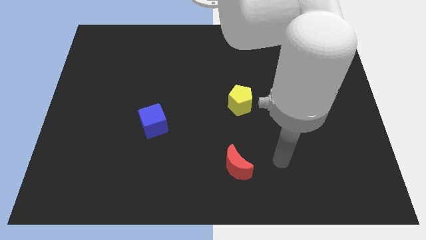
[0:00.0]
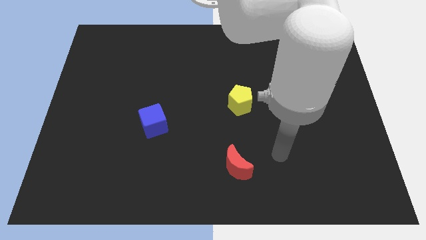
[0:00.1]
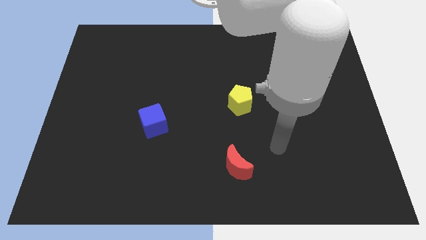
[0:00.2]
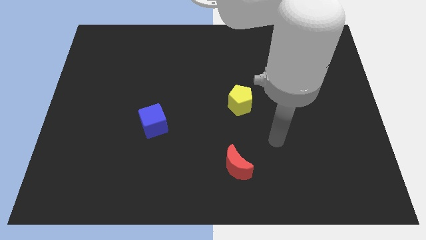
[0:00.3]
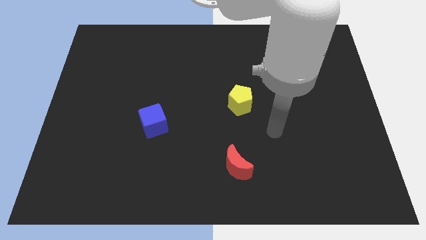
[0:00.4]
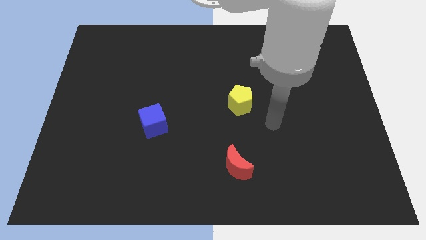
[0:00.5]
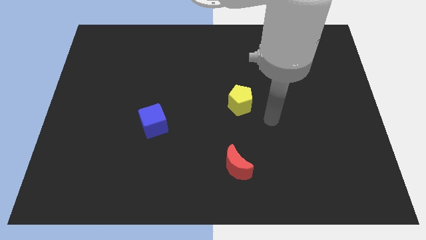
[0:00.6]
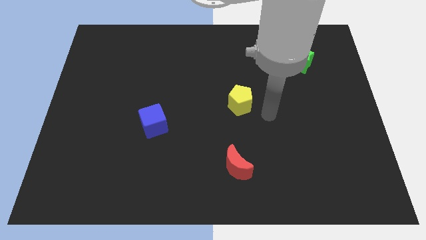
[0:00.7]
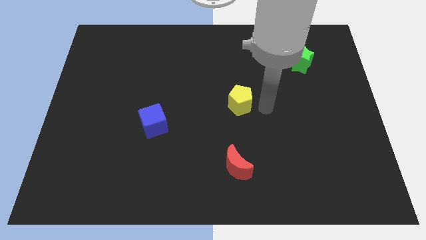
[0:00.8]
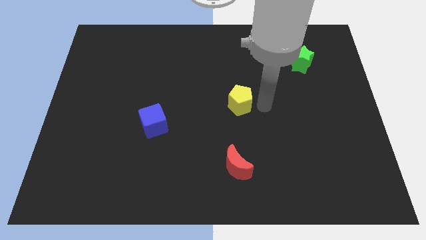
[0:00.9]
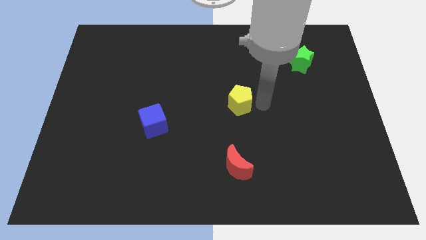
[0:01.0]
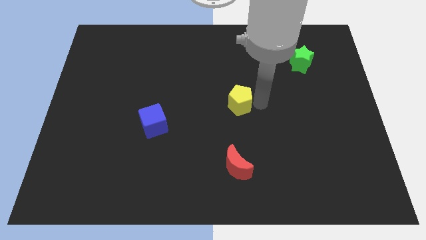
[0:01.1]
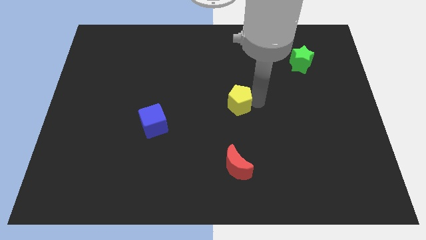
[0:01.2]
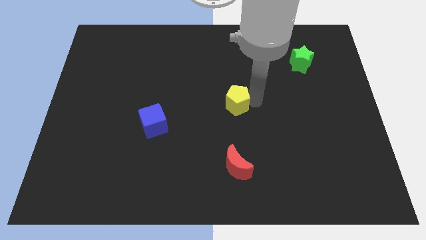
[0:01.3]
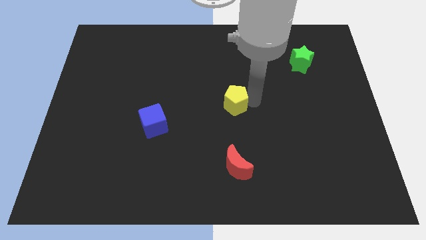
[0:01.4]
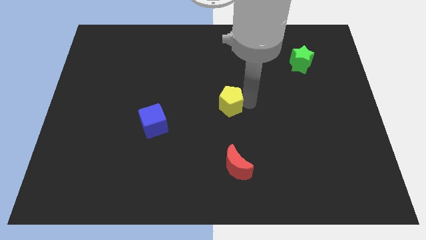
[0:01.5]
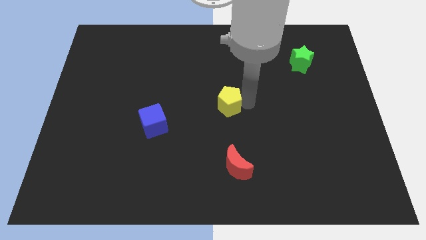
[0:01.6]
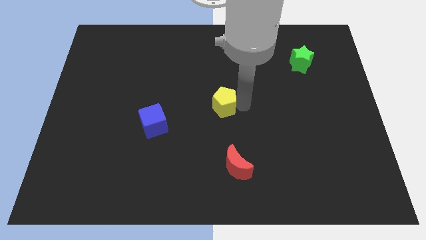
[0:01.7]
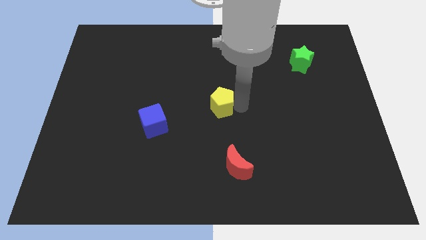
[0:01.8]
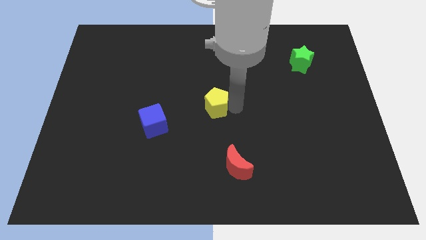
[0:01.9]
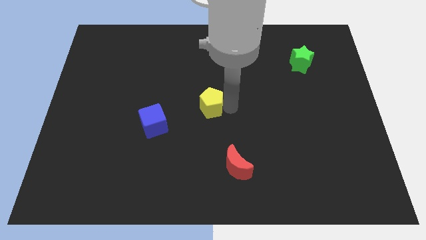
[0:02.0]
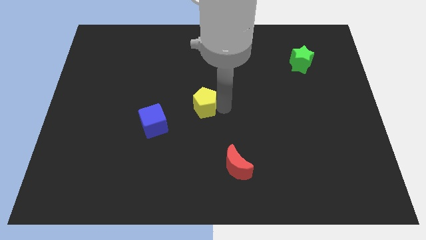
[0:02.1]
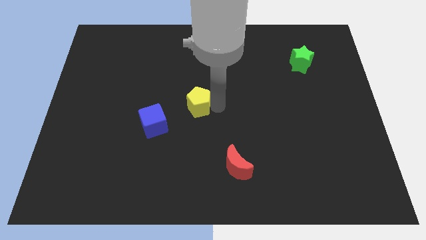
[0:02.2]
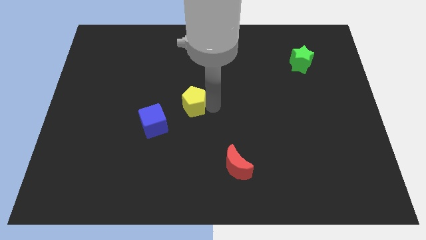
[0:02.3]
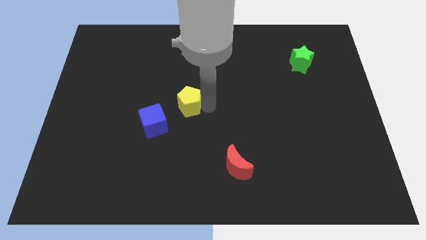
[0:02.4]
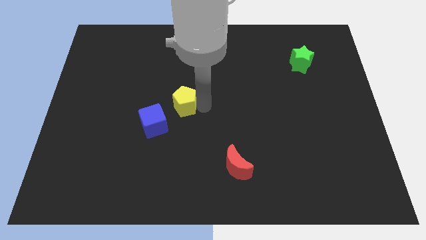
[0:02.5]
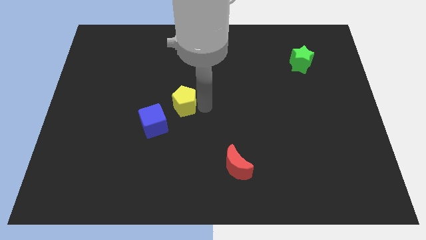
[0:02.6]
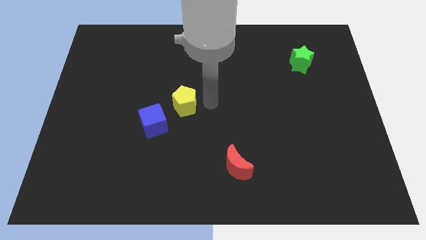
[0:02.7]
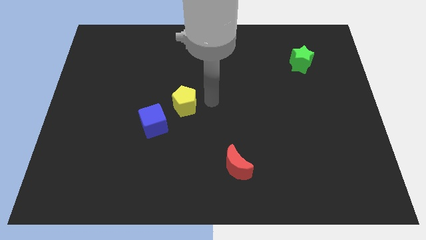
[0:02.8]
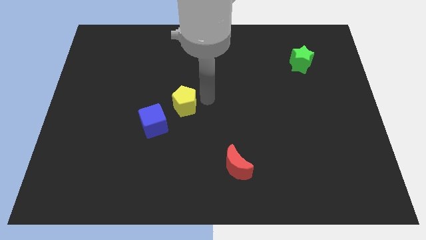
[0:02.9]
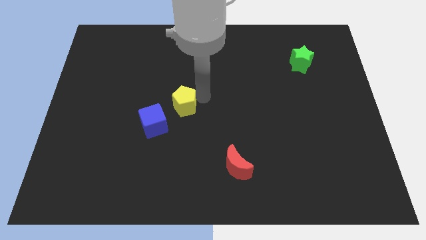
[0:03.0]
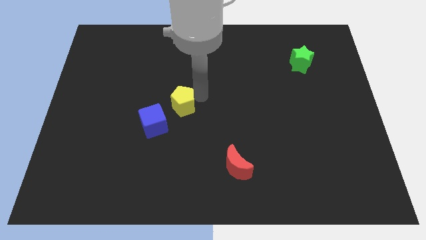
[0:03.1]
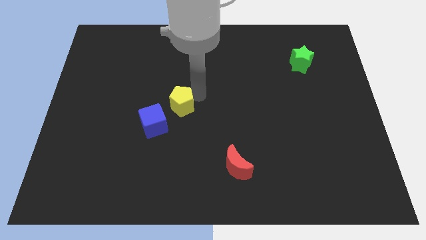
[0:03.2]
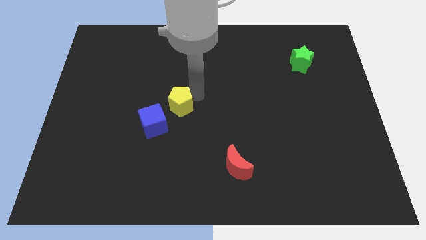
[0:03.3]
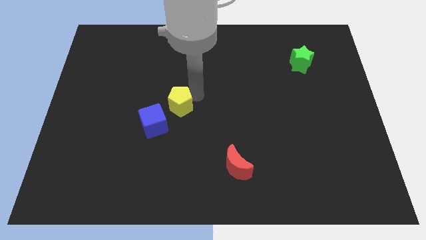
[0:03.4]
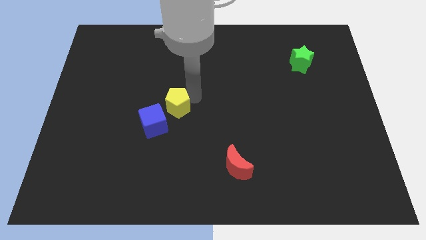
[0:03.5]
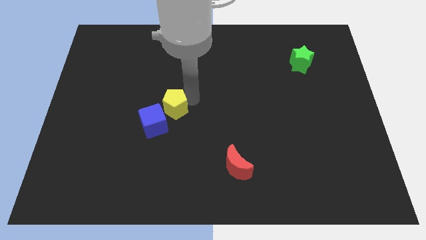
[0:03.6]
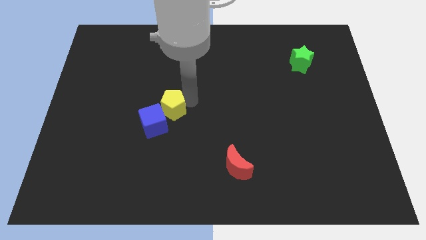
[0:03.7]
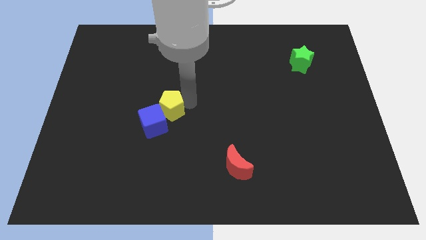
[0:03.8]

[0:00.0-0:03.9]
slide the yellow block next to the blue cube

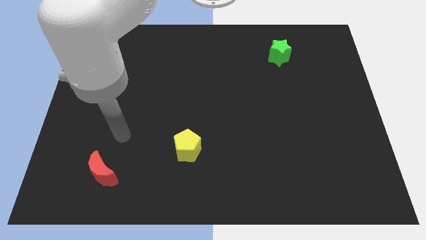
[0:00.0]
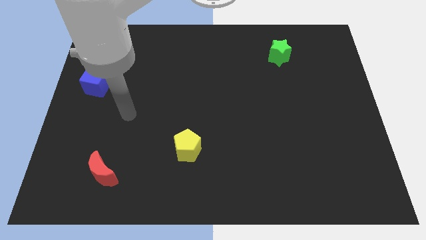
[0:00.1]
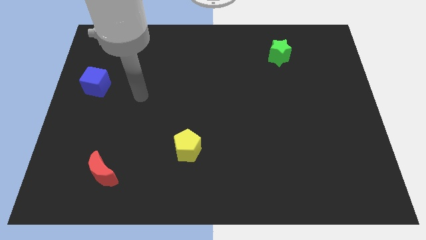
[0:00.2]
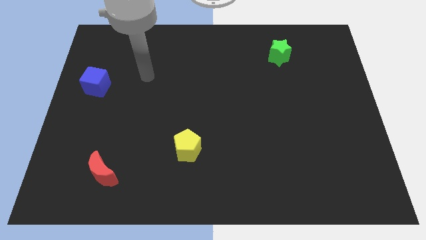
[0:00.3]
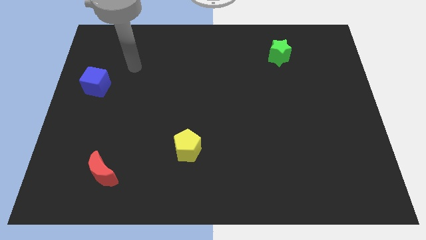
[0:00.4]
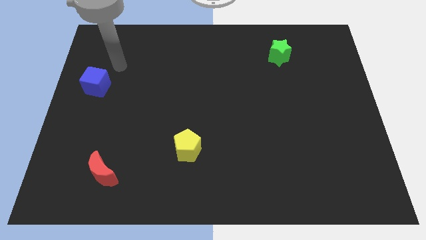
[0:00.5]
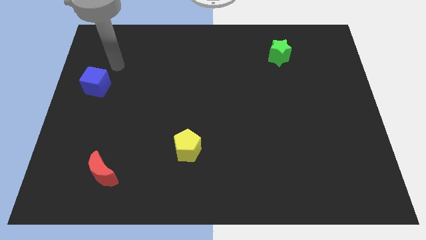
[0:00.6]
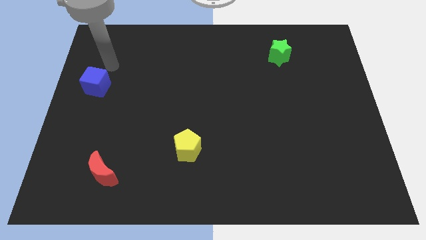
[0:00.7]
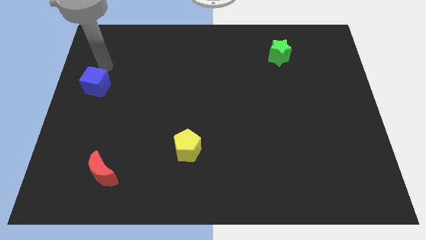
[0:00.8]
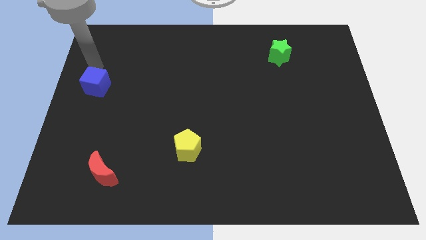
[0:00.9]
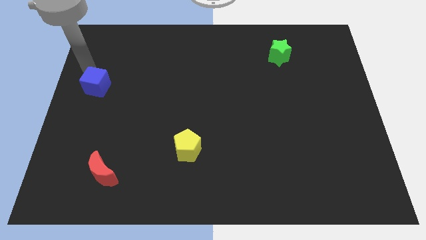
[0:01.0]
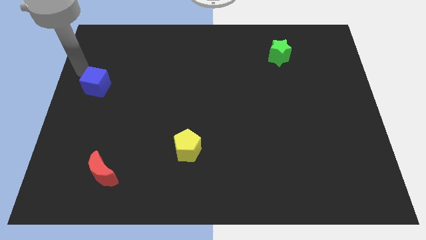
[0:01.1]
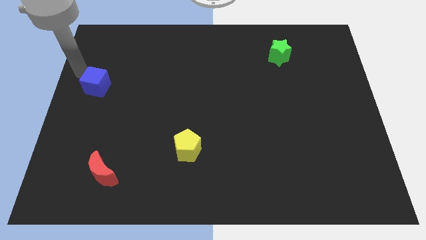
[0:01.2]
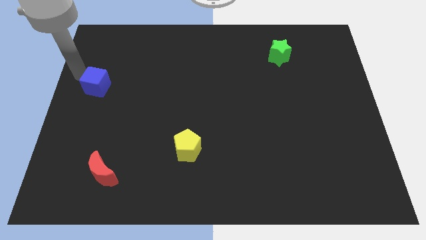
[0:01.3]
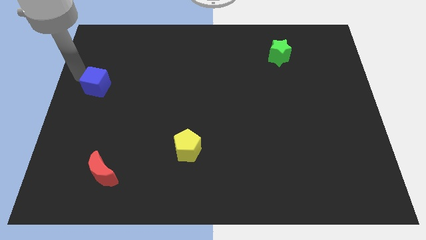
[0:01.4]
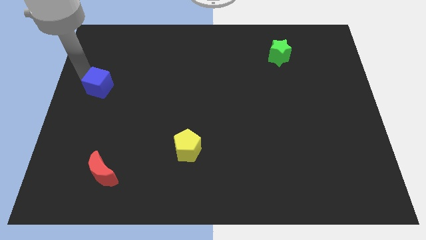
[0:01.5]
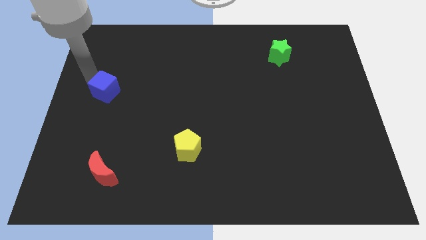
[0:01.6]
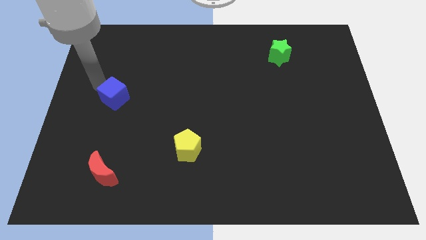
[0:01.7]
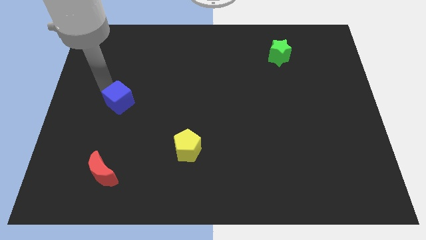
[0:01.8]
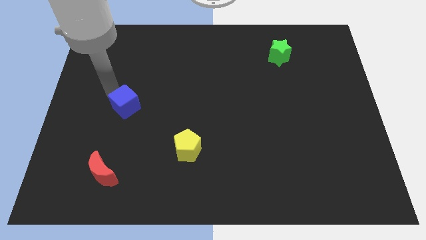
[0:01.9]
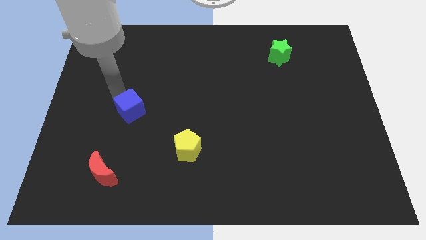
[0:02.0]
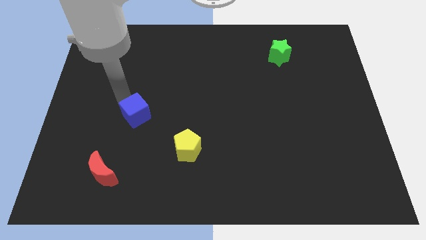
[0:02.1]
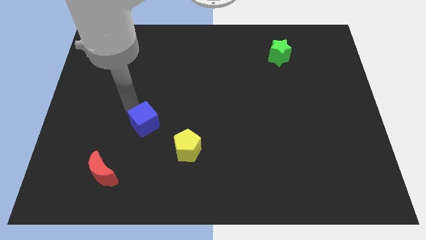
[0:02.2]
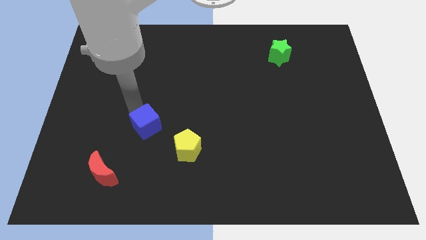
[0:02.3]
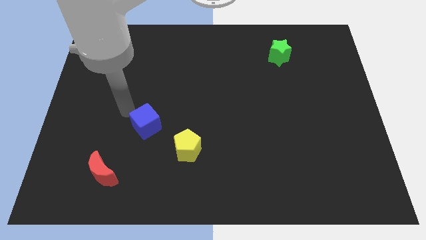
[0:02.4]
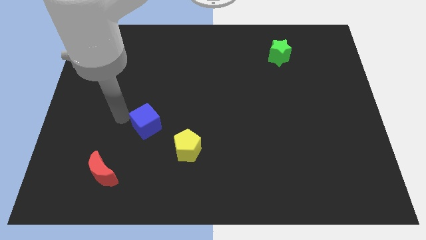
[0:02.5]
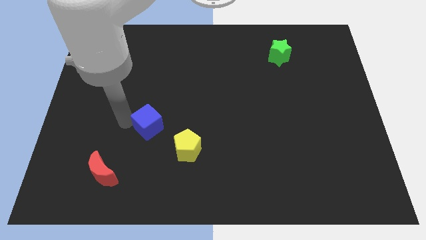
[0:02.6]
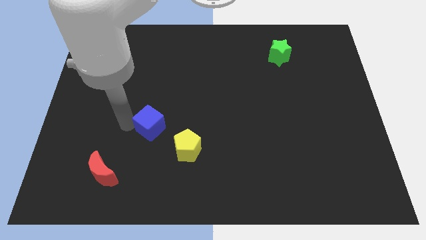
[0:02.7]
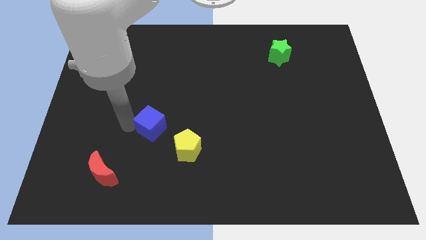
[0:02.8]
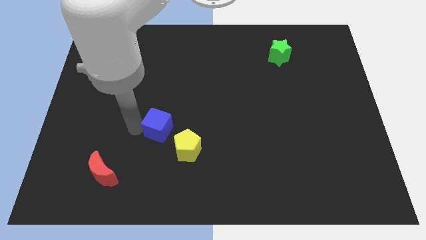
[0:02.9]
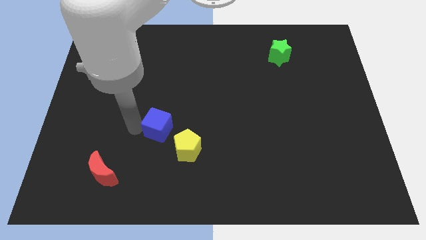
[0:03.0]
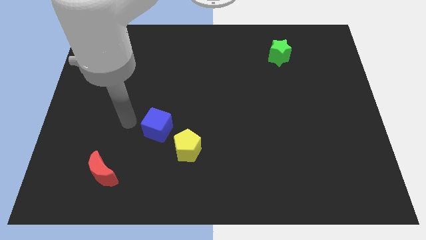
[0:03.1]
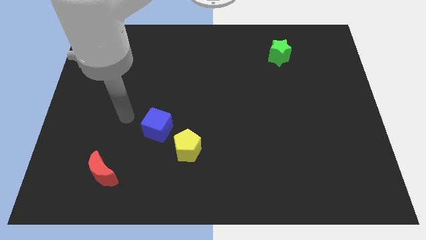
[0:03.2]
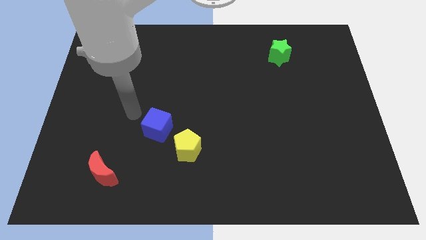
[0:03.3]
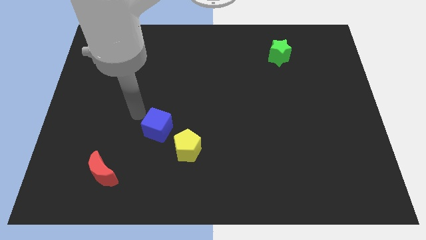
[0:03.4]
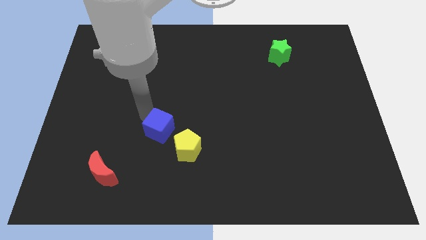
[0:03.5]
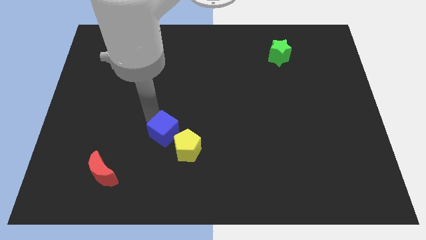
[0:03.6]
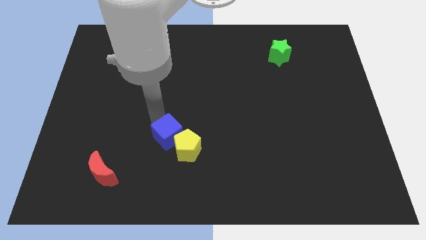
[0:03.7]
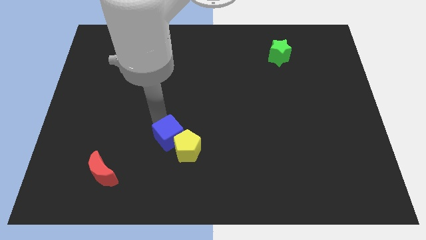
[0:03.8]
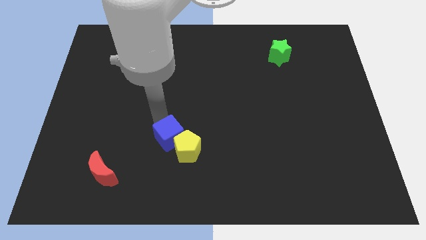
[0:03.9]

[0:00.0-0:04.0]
put the blue cube next to the yellow pentagon

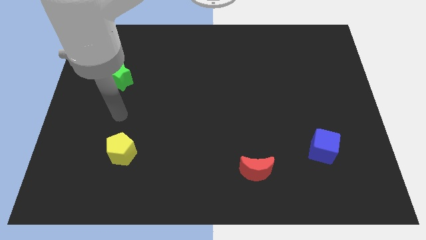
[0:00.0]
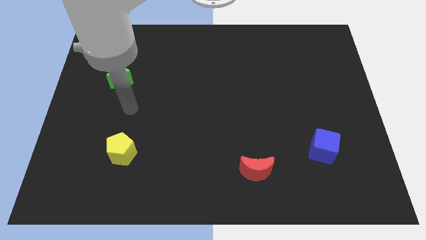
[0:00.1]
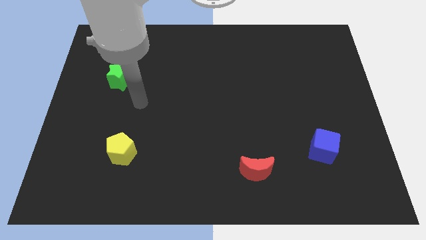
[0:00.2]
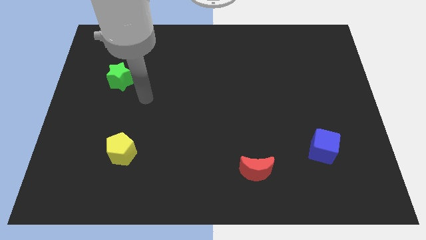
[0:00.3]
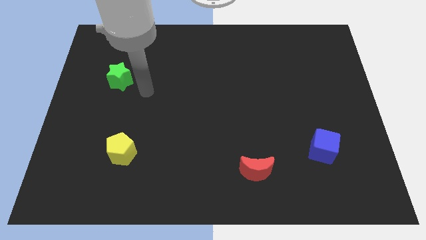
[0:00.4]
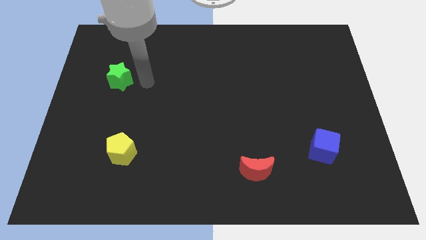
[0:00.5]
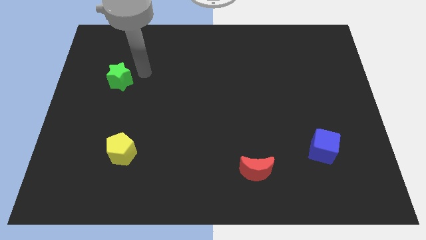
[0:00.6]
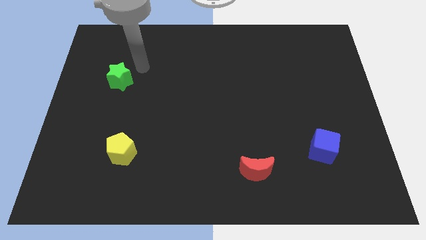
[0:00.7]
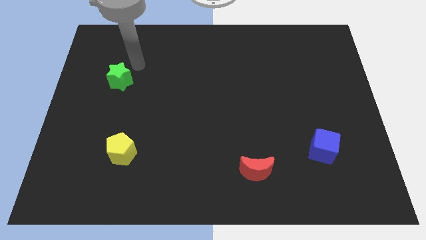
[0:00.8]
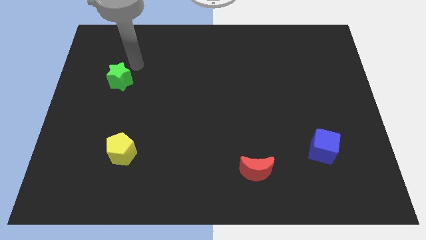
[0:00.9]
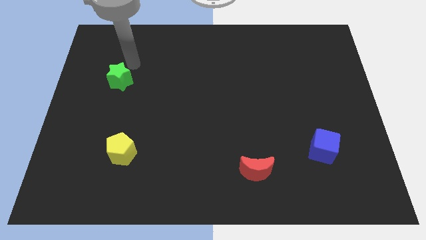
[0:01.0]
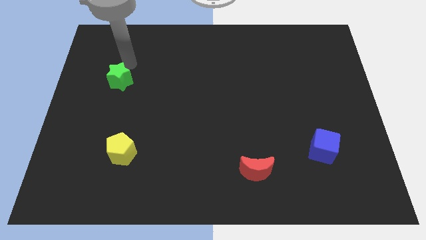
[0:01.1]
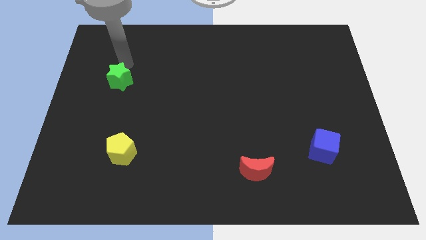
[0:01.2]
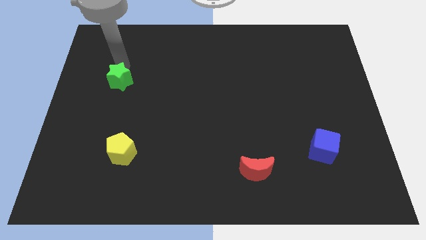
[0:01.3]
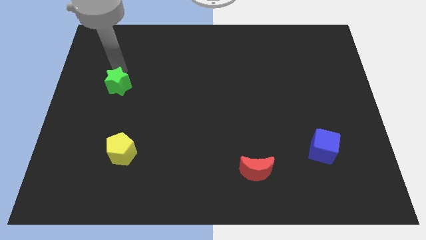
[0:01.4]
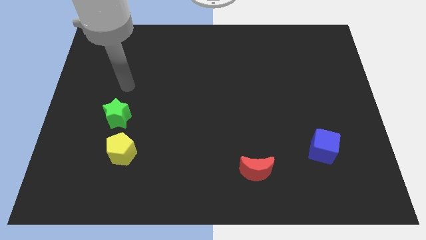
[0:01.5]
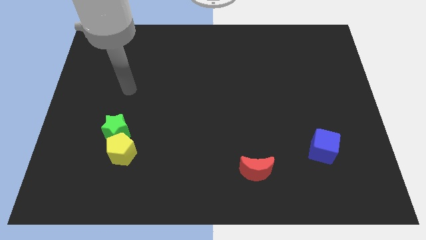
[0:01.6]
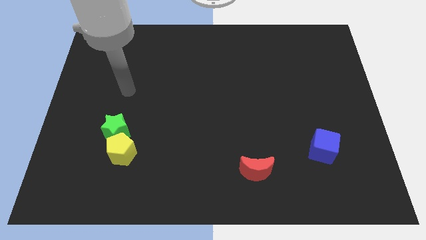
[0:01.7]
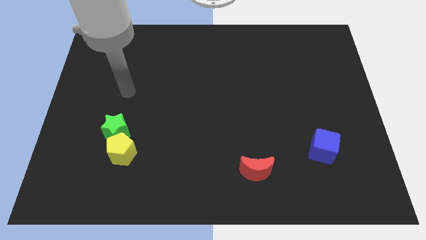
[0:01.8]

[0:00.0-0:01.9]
move the green block close to the yellow block
